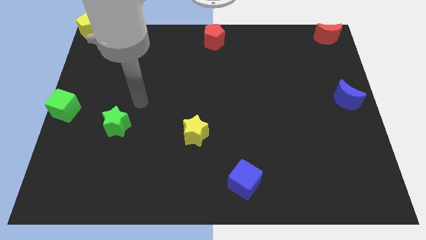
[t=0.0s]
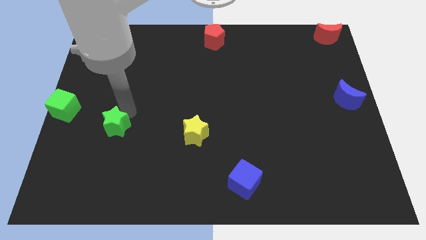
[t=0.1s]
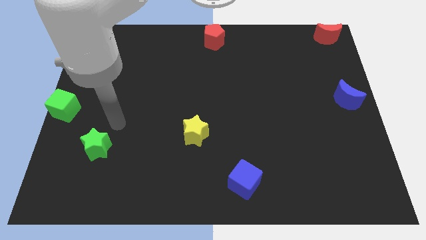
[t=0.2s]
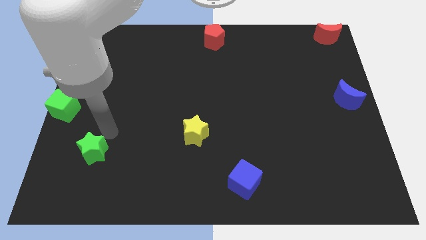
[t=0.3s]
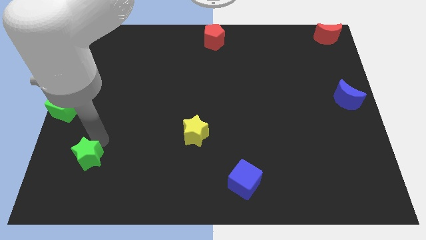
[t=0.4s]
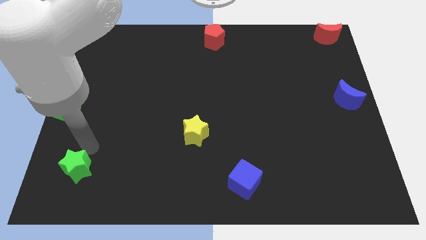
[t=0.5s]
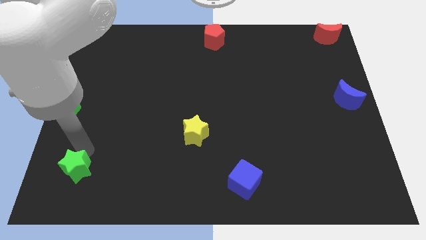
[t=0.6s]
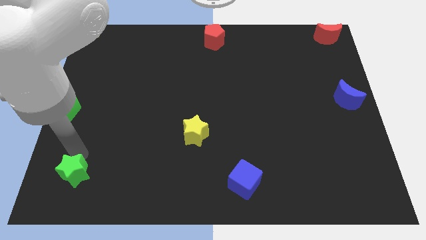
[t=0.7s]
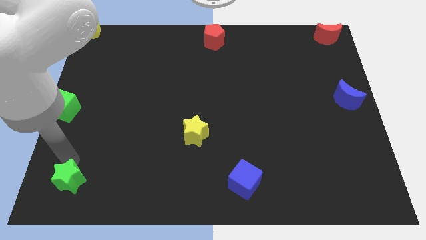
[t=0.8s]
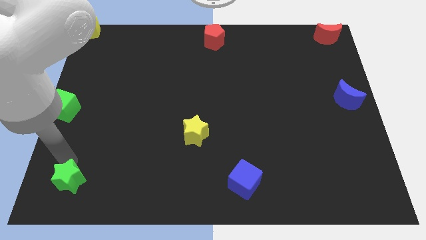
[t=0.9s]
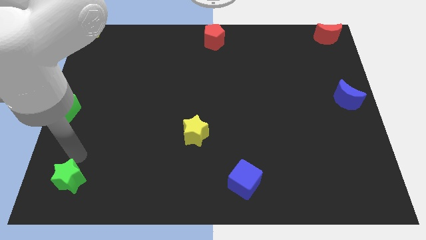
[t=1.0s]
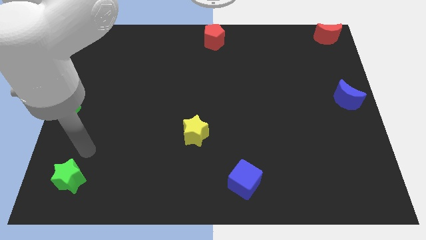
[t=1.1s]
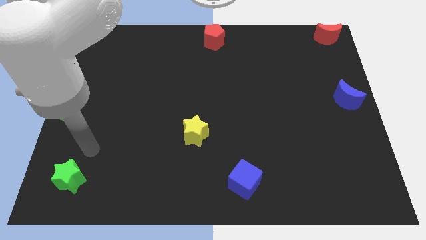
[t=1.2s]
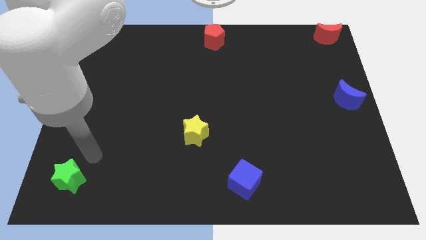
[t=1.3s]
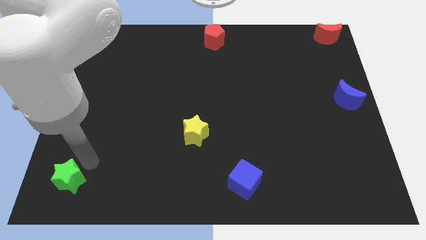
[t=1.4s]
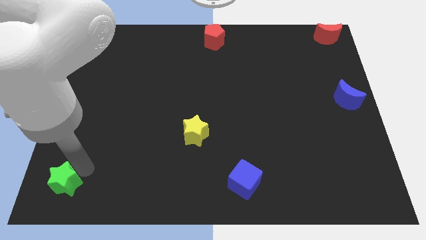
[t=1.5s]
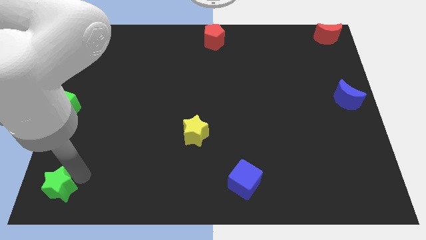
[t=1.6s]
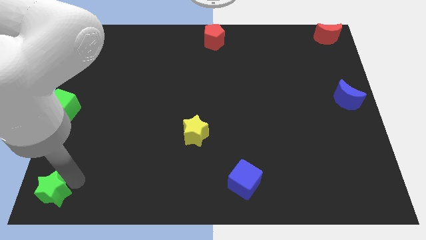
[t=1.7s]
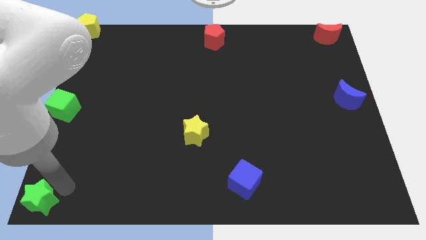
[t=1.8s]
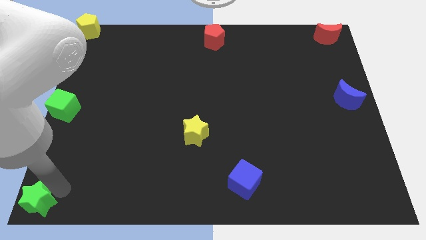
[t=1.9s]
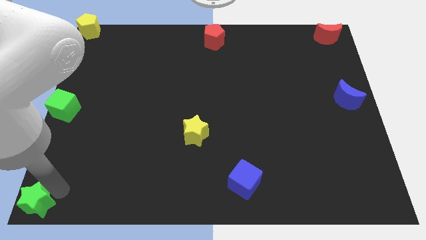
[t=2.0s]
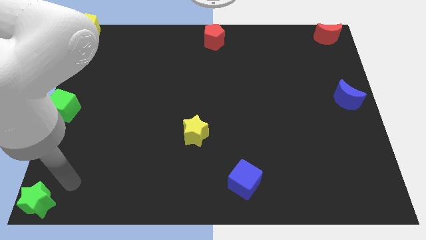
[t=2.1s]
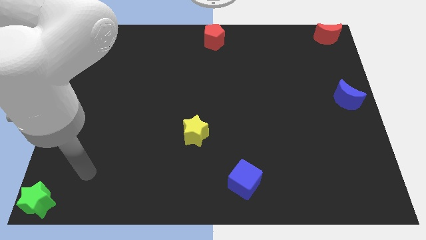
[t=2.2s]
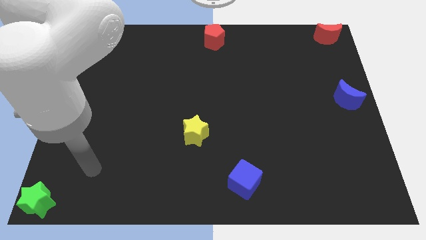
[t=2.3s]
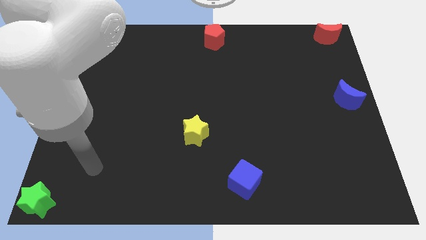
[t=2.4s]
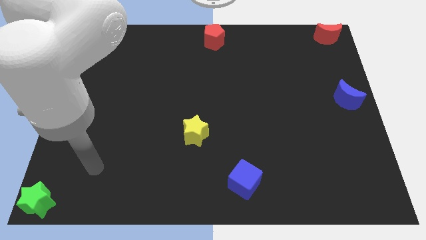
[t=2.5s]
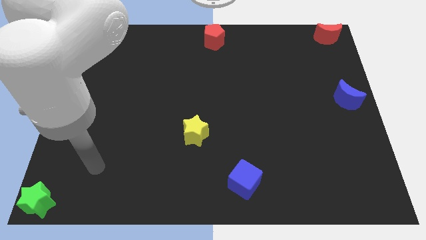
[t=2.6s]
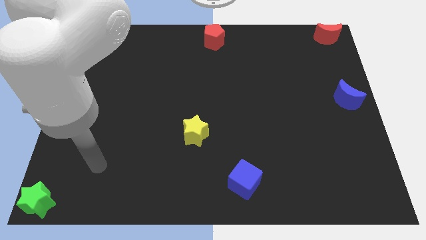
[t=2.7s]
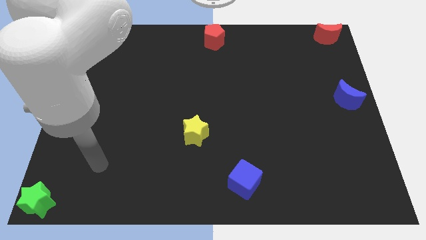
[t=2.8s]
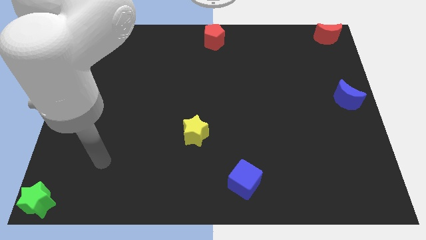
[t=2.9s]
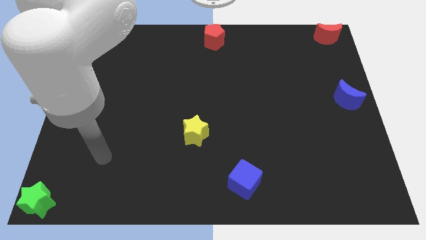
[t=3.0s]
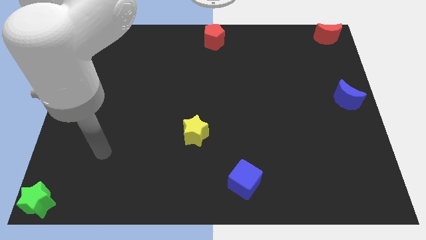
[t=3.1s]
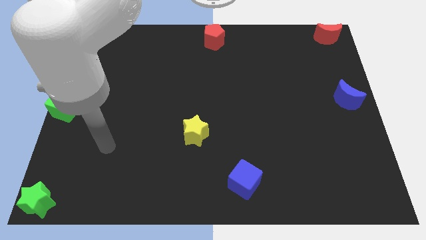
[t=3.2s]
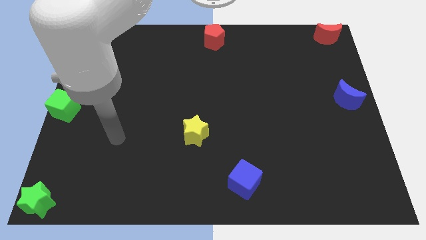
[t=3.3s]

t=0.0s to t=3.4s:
move the green star to the bottom left corner

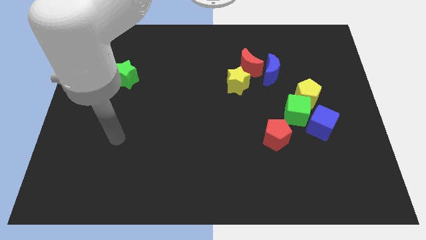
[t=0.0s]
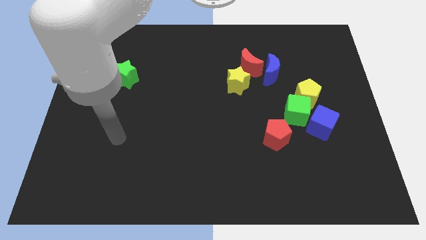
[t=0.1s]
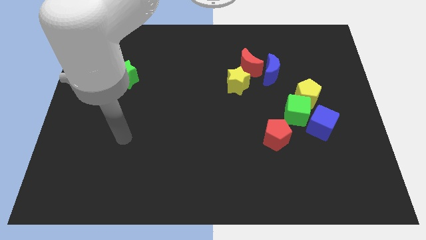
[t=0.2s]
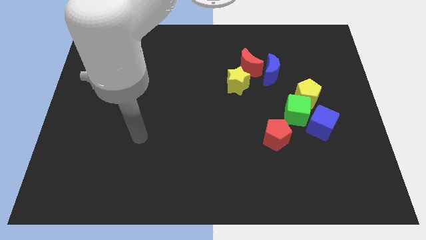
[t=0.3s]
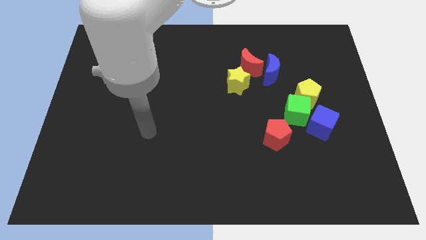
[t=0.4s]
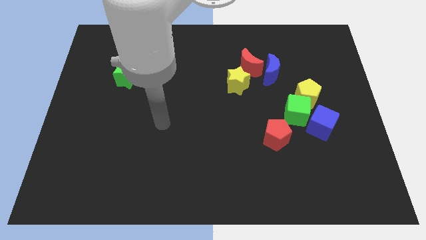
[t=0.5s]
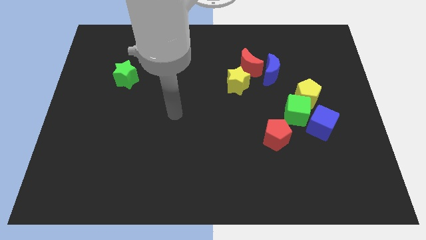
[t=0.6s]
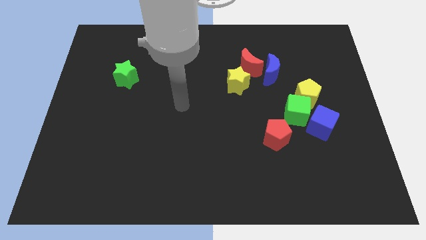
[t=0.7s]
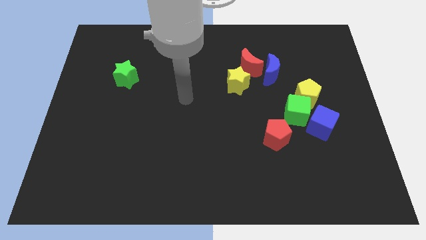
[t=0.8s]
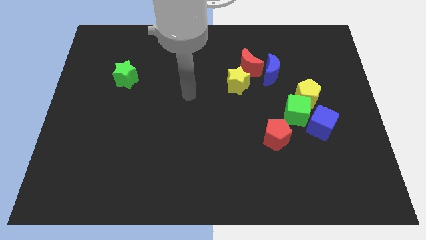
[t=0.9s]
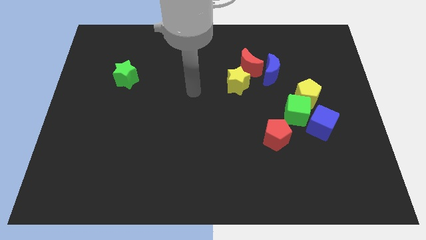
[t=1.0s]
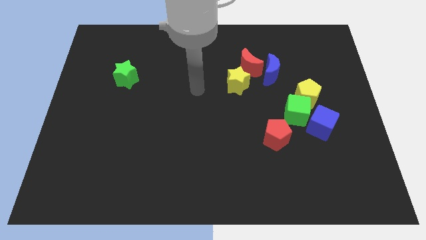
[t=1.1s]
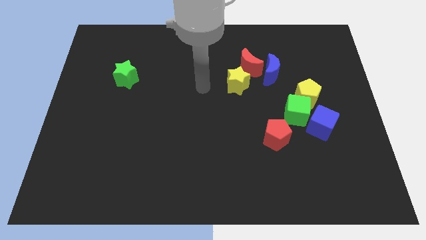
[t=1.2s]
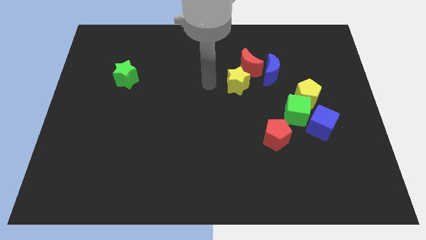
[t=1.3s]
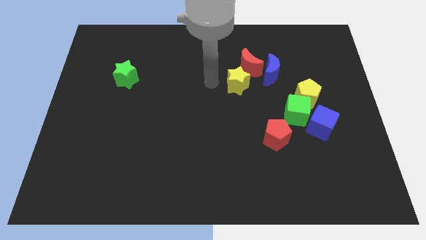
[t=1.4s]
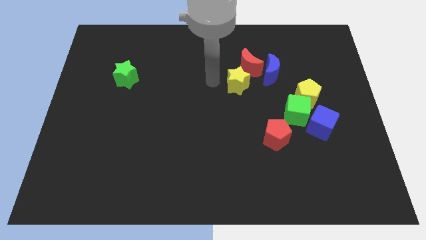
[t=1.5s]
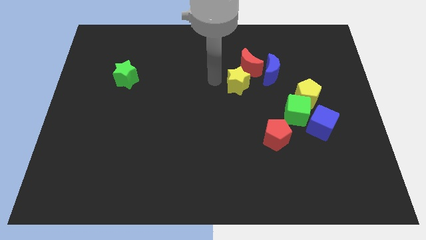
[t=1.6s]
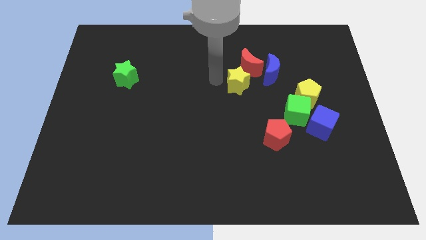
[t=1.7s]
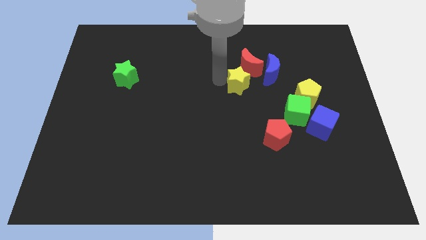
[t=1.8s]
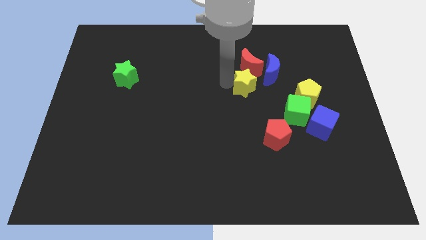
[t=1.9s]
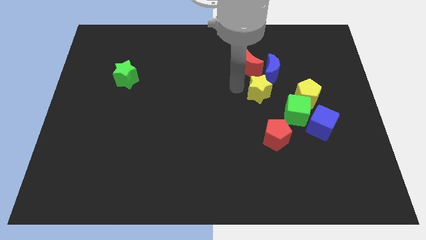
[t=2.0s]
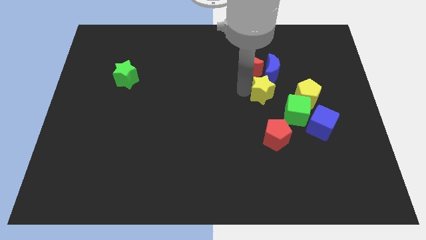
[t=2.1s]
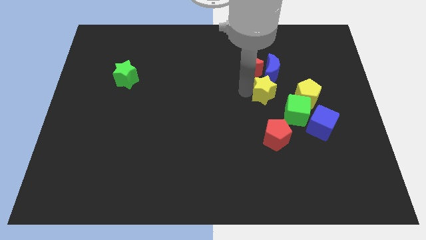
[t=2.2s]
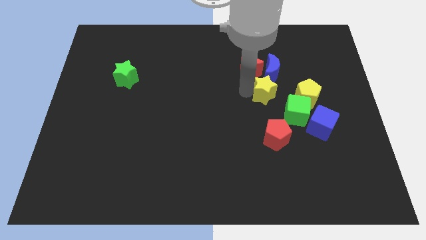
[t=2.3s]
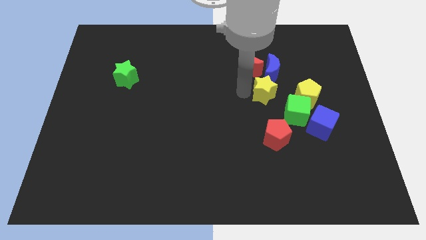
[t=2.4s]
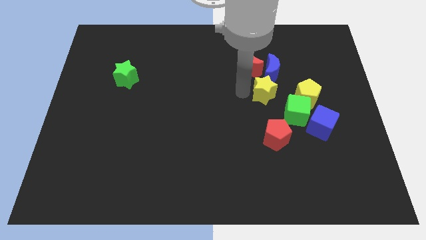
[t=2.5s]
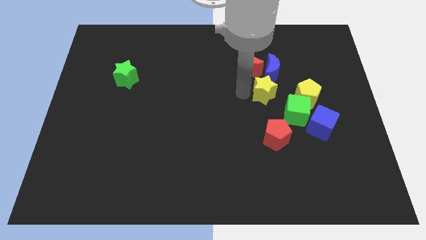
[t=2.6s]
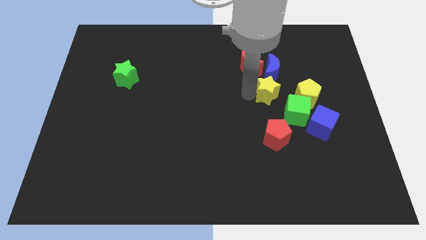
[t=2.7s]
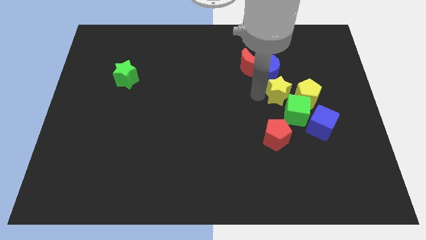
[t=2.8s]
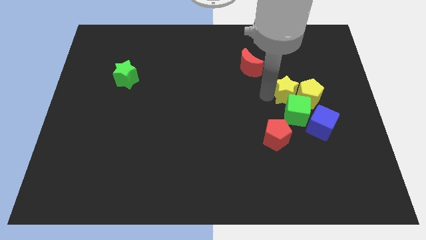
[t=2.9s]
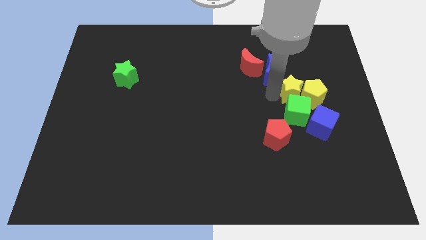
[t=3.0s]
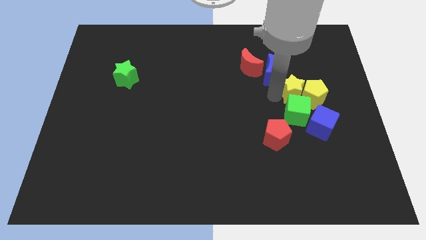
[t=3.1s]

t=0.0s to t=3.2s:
move the yellow star to the left of yellow pentagon

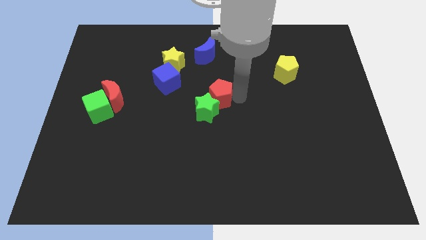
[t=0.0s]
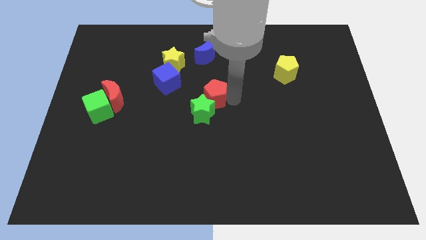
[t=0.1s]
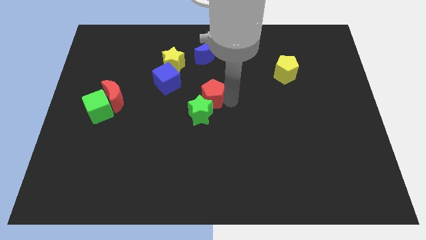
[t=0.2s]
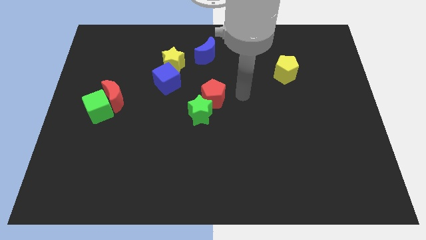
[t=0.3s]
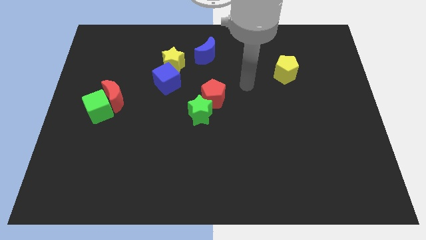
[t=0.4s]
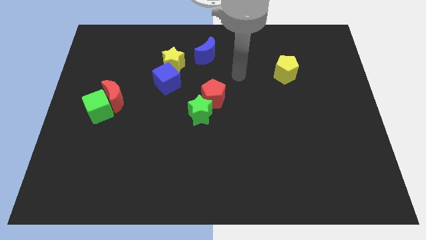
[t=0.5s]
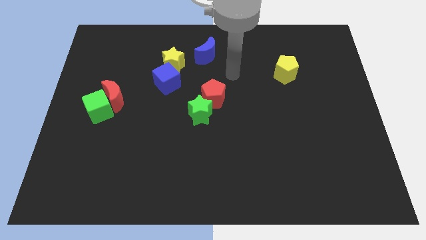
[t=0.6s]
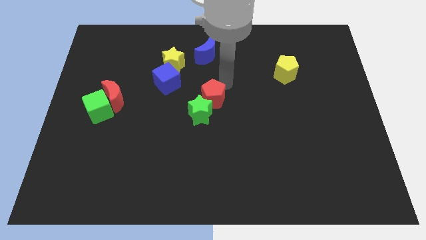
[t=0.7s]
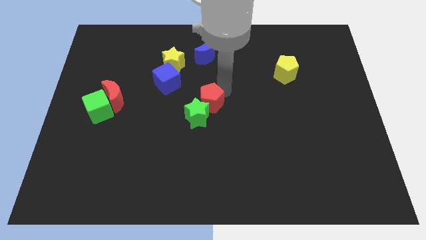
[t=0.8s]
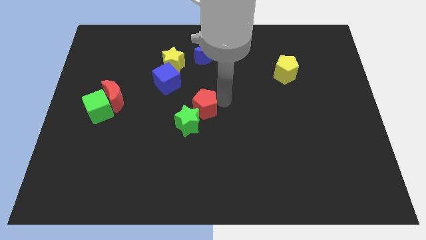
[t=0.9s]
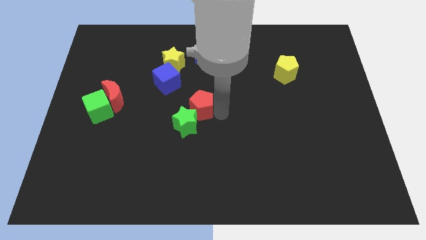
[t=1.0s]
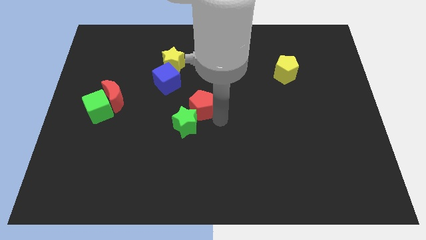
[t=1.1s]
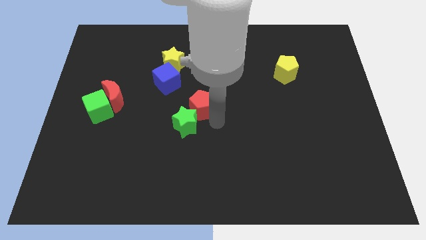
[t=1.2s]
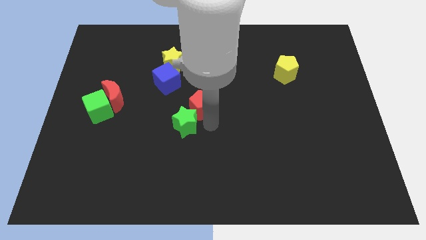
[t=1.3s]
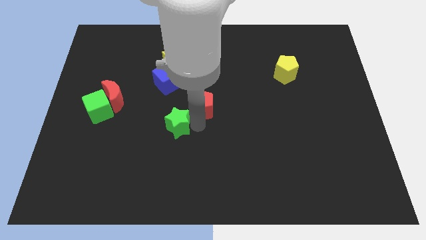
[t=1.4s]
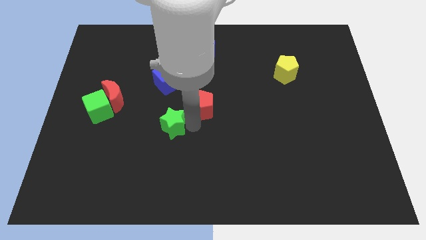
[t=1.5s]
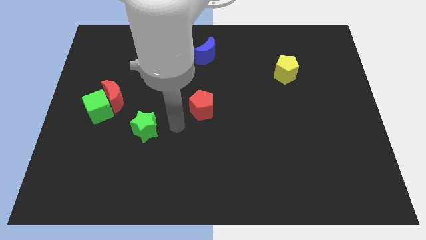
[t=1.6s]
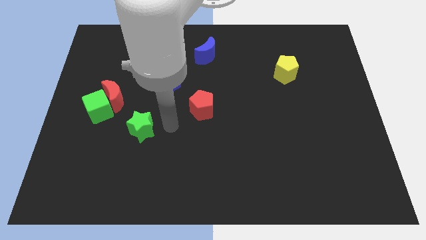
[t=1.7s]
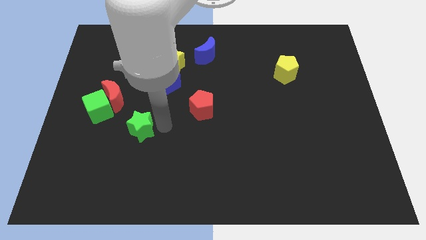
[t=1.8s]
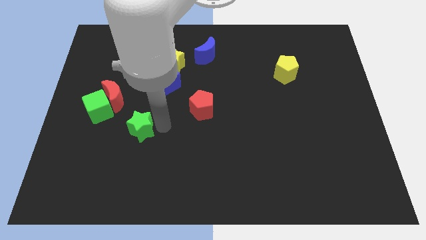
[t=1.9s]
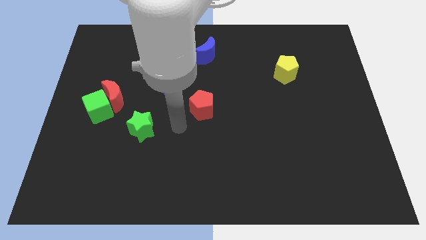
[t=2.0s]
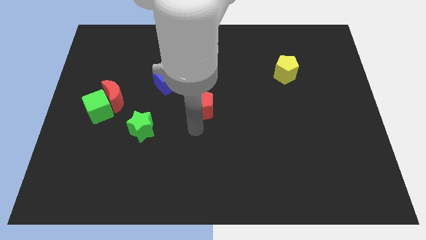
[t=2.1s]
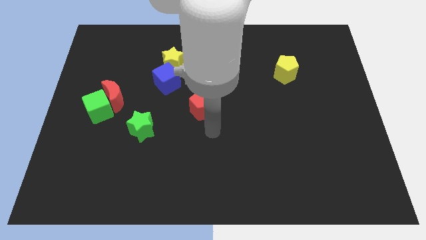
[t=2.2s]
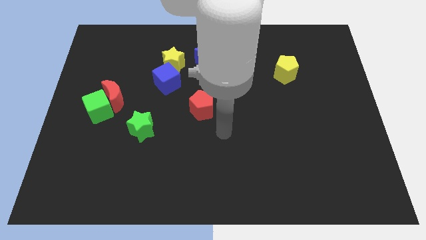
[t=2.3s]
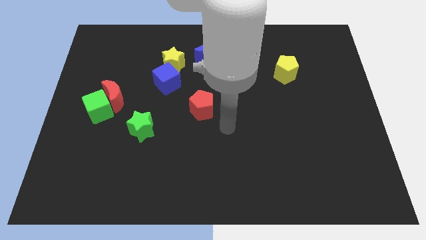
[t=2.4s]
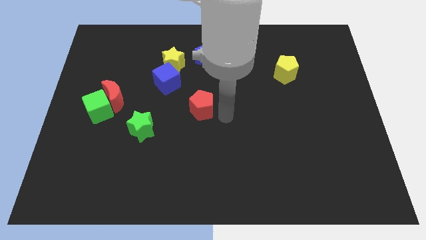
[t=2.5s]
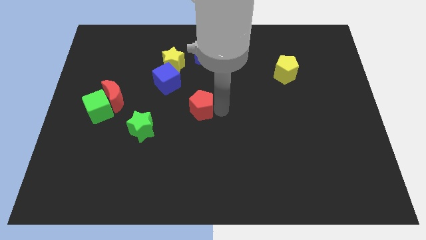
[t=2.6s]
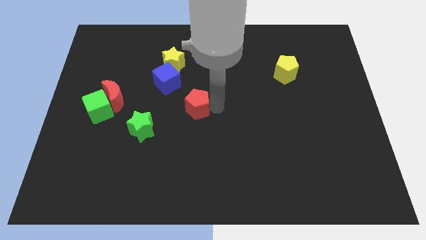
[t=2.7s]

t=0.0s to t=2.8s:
separate the green star from the red pentagon
